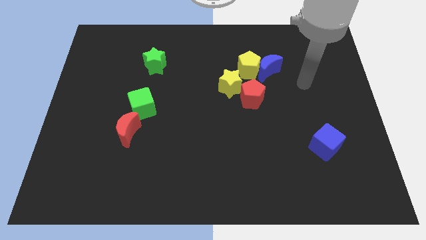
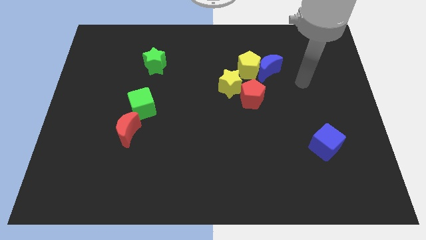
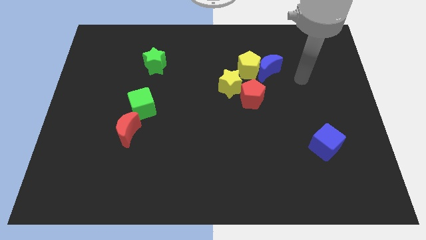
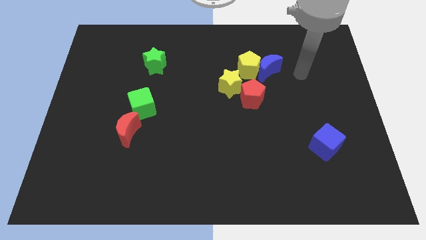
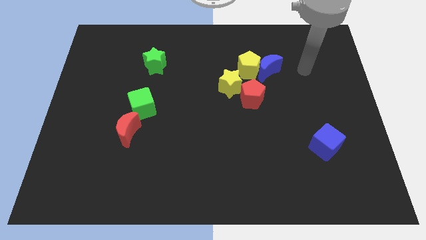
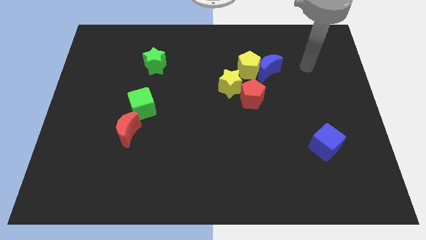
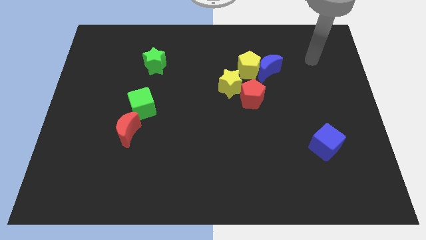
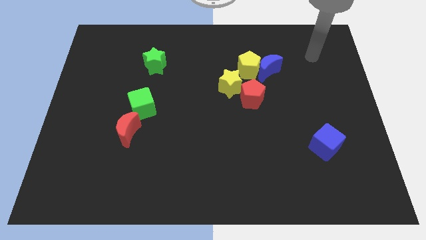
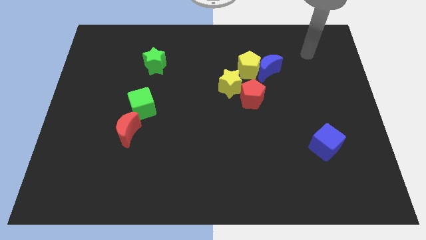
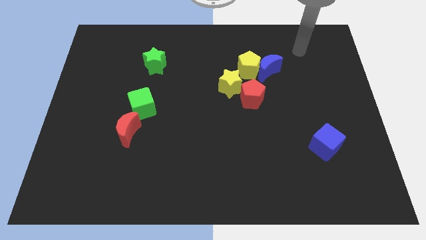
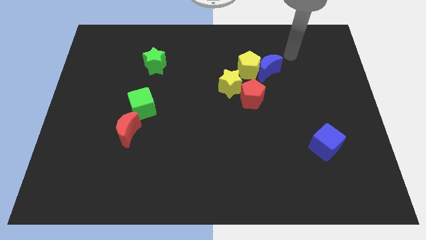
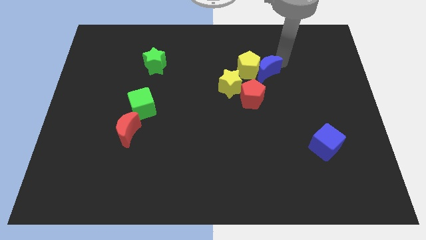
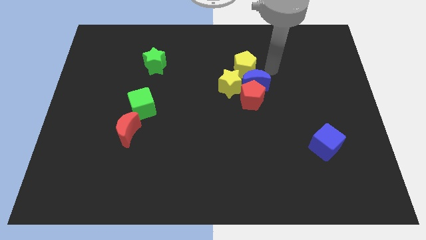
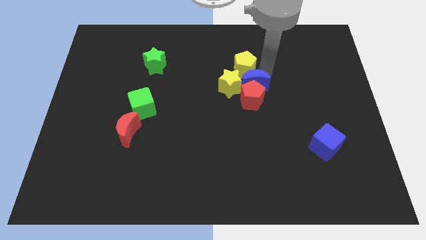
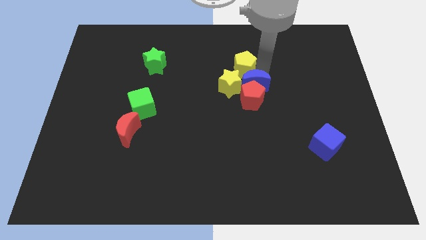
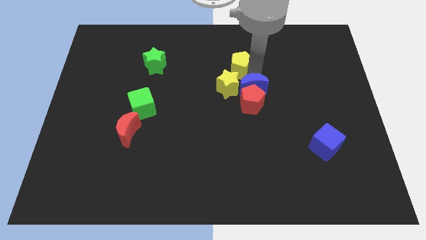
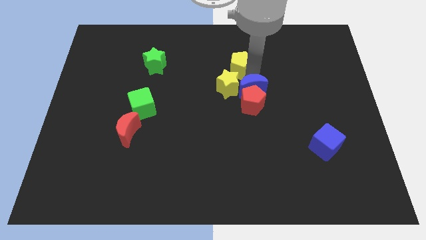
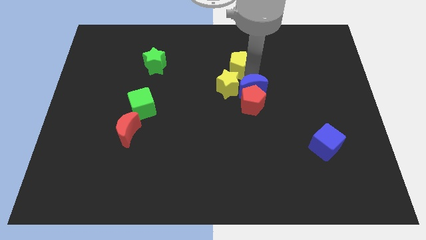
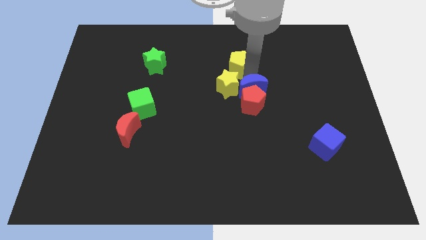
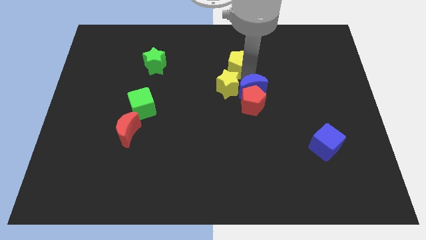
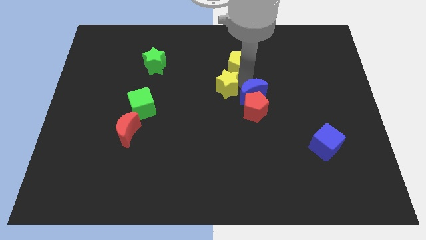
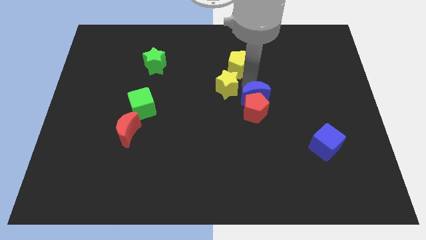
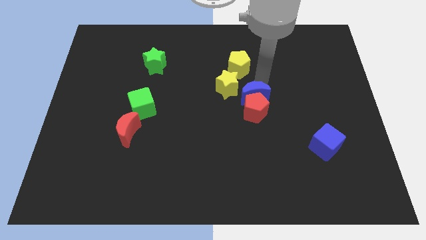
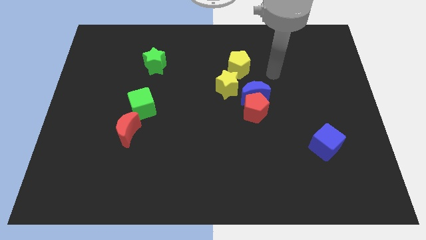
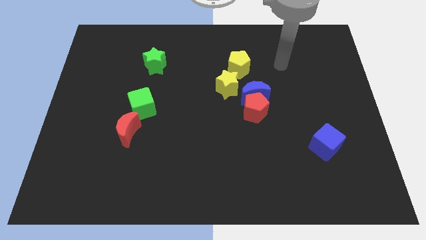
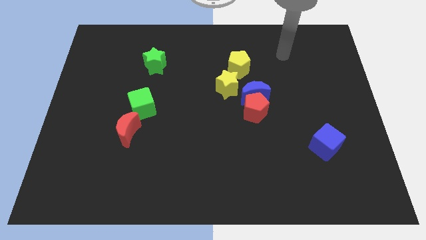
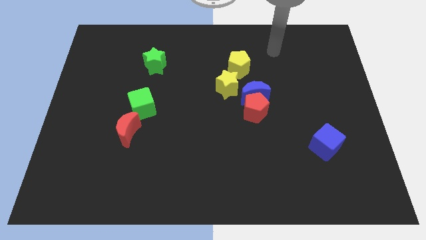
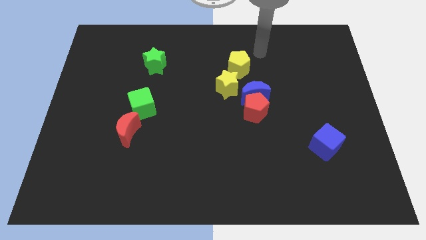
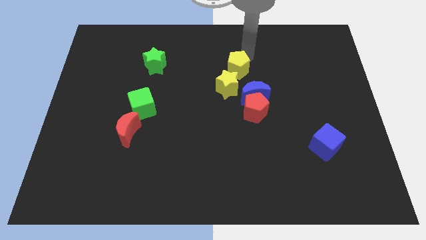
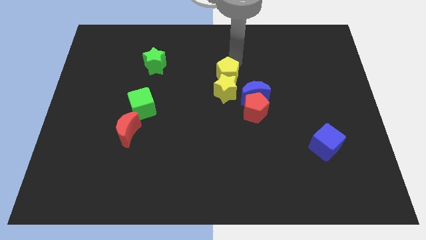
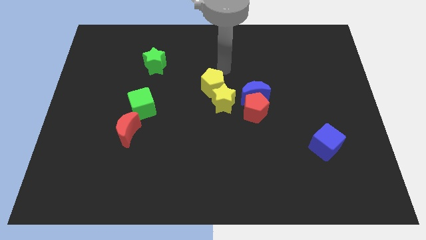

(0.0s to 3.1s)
separate the yellow blocks from the other things

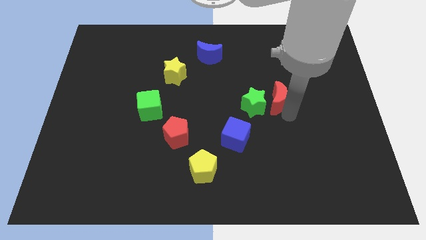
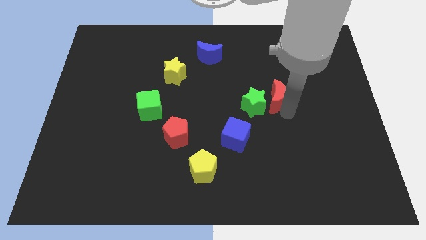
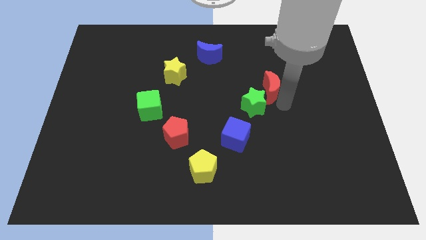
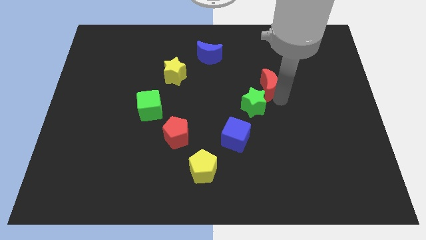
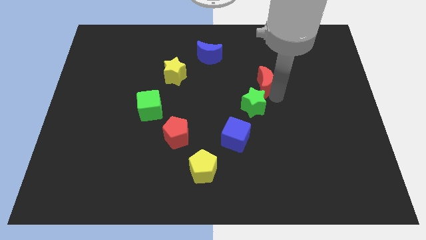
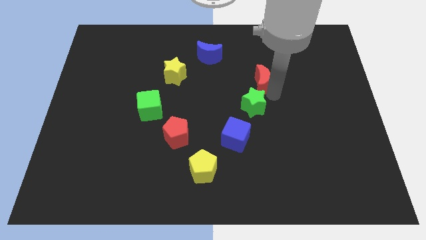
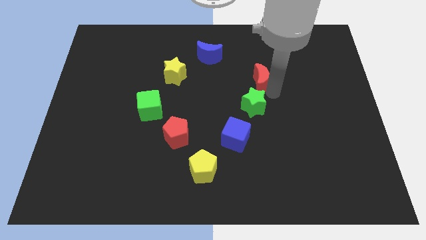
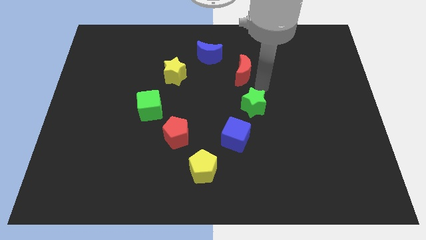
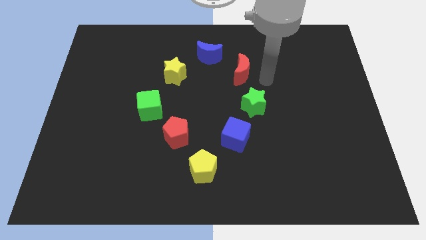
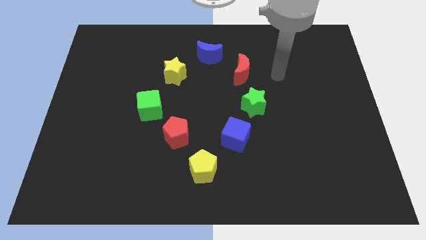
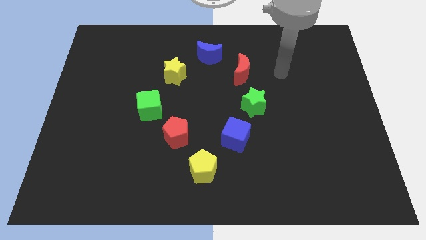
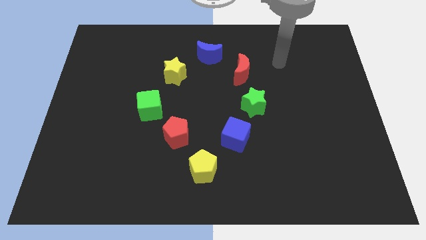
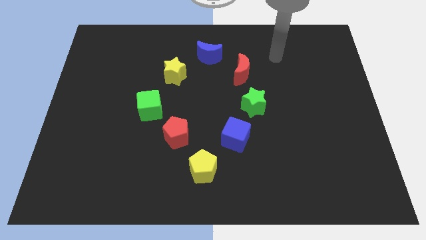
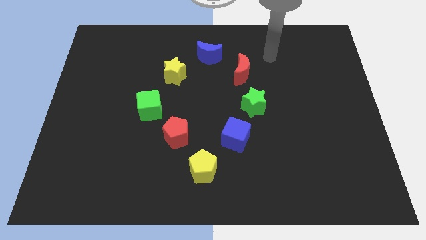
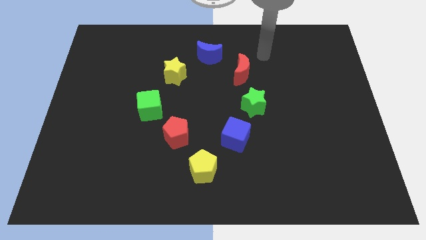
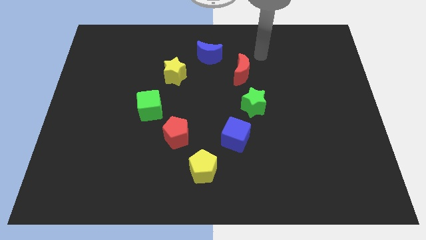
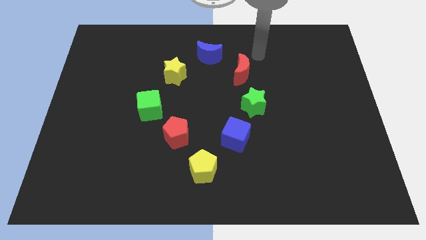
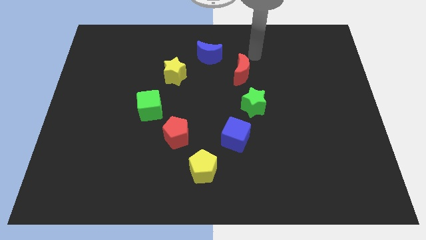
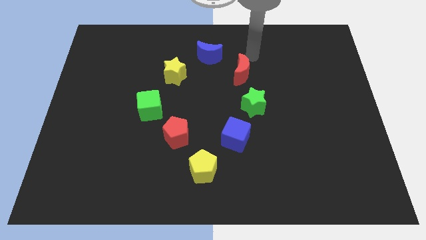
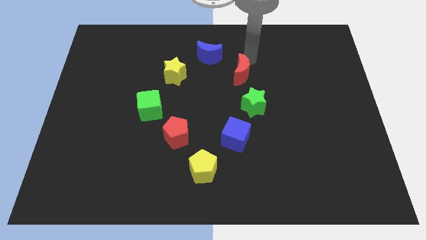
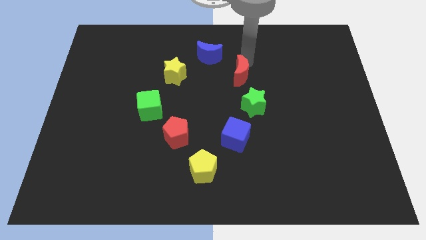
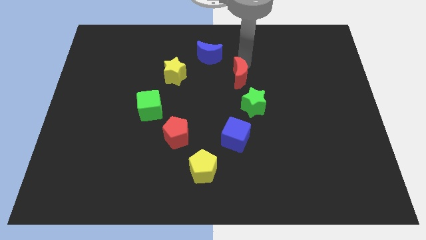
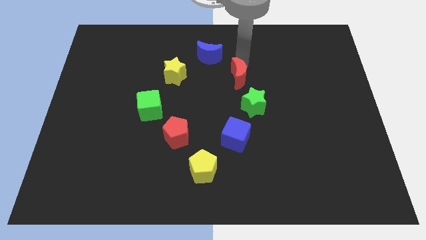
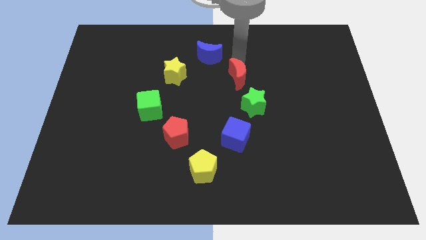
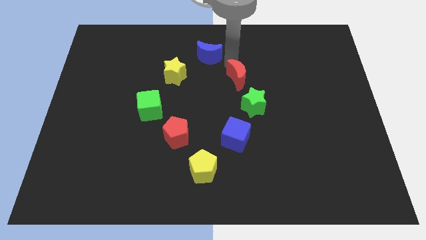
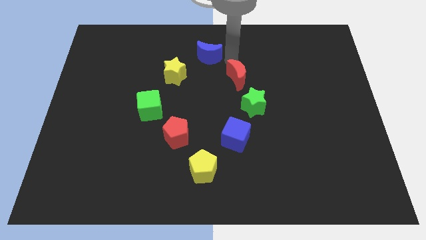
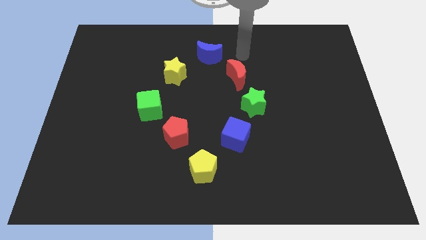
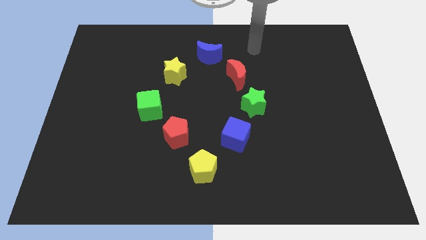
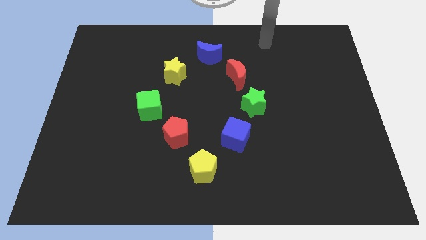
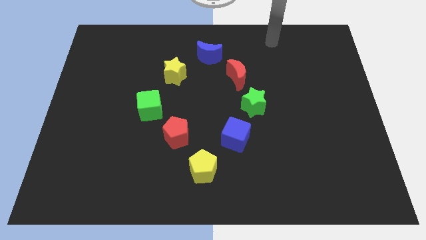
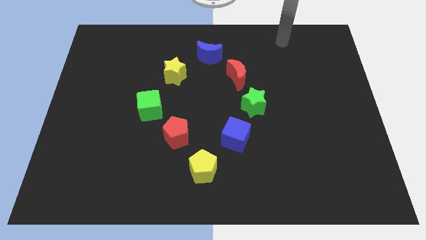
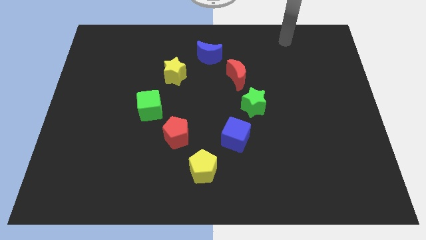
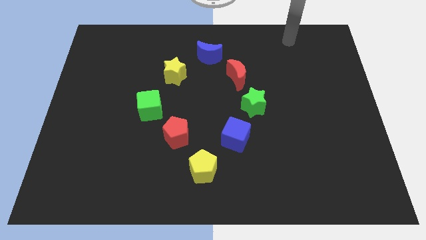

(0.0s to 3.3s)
push the red moon in between the blue moon and green star

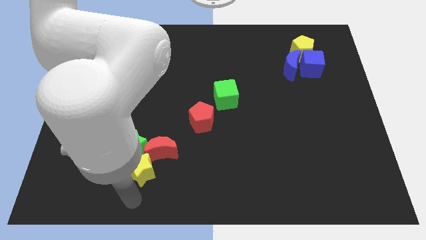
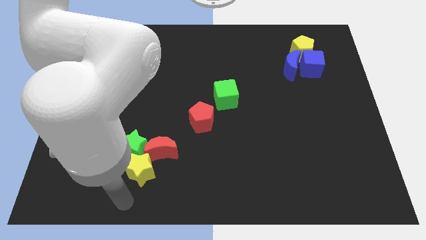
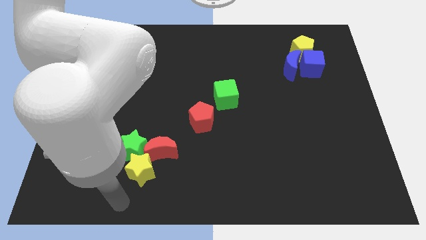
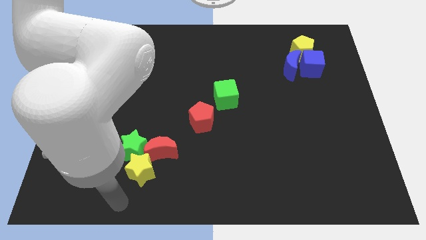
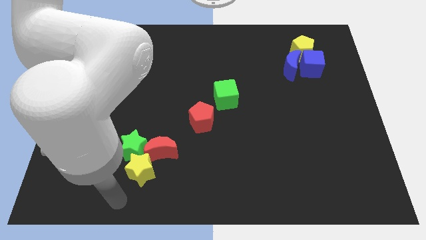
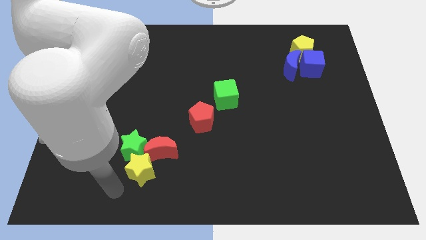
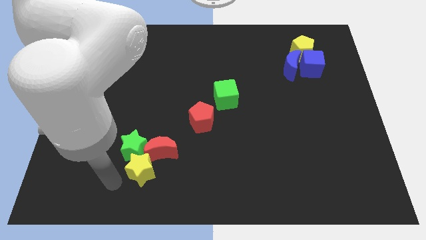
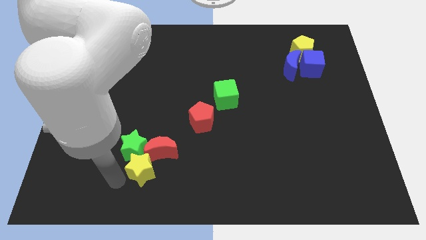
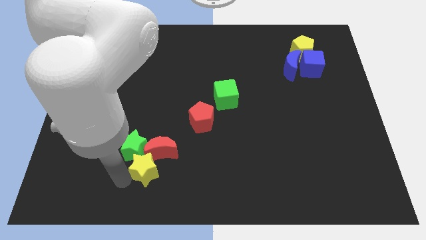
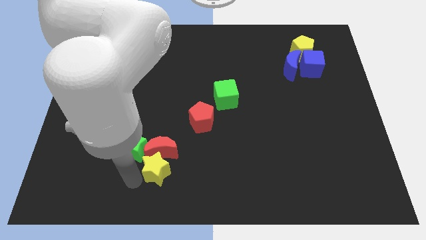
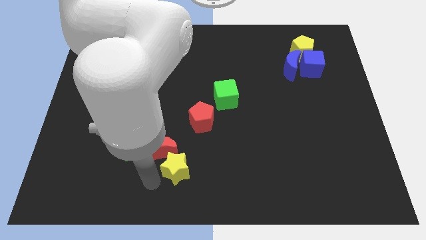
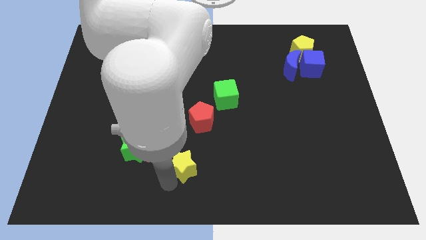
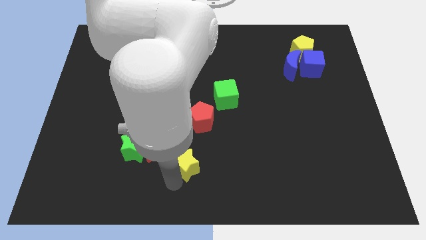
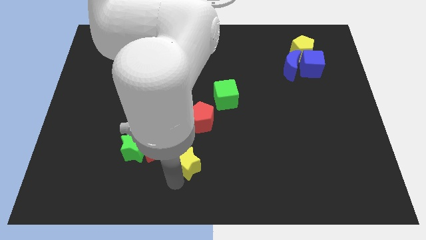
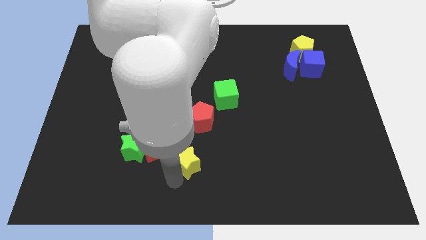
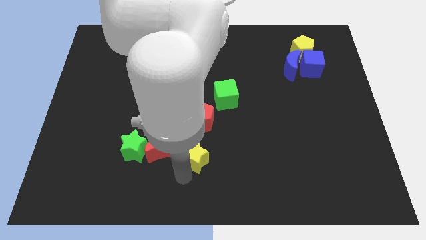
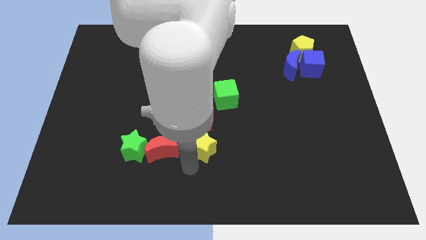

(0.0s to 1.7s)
slightly push the yellow star towards right side

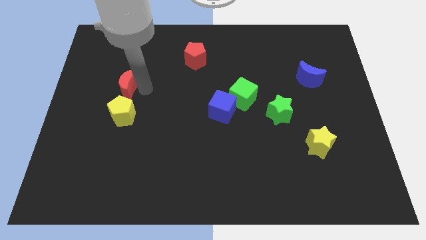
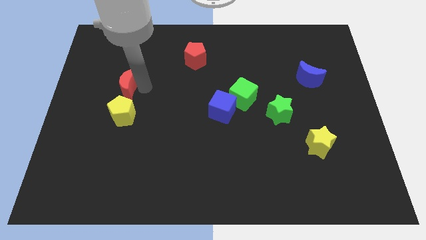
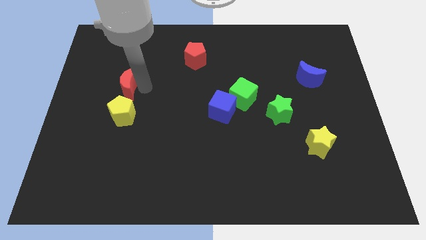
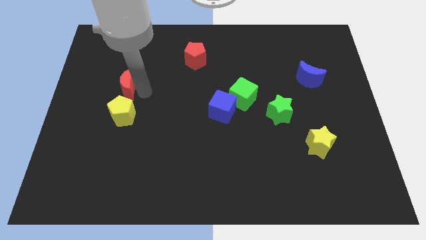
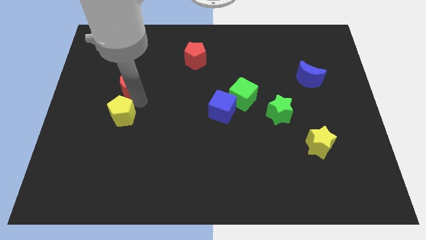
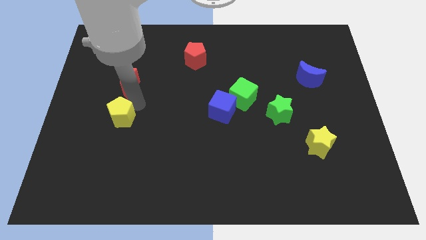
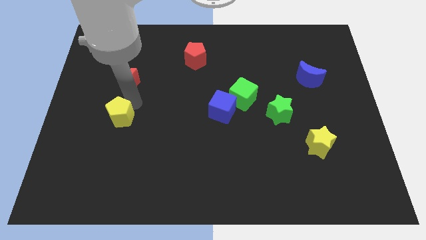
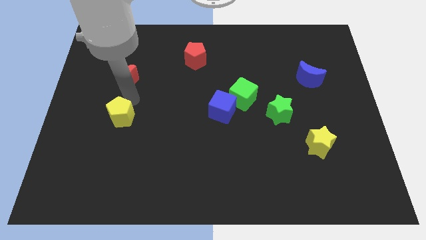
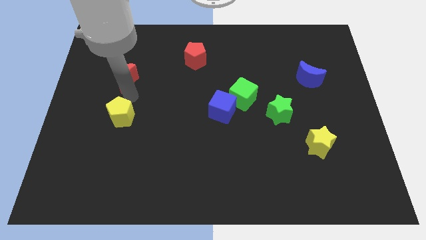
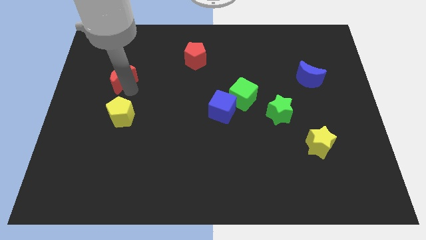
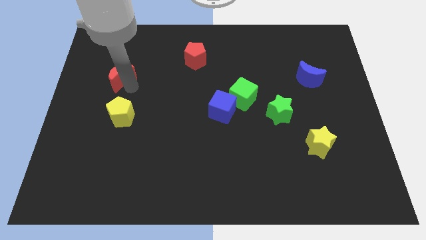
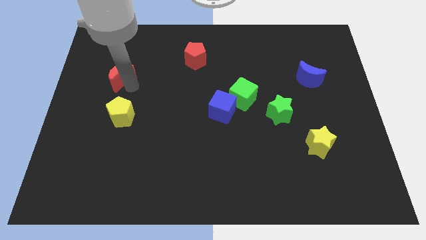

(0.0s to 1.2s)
move red moon slightly towards top
